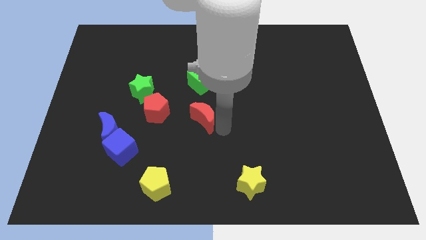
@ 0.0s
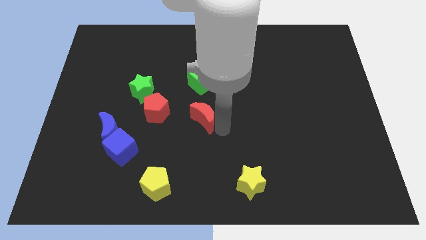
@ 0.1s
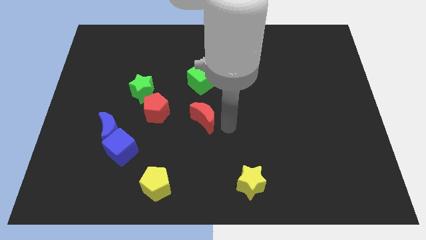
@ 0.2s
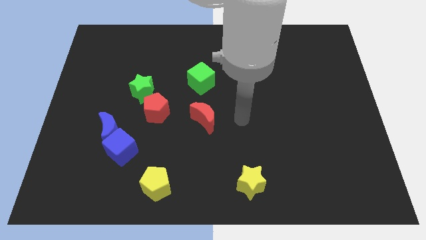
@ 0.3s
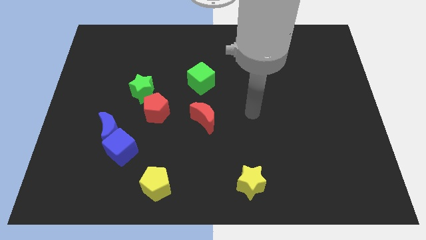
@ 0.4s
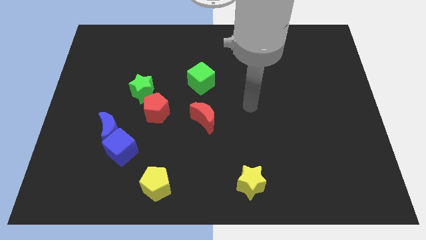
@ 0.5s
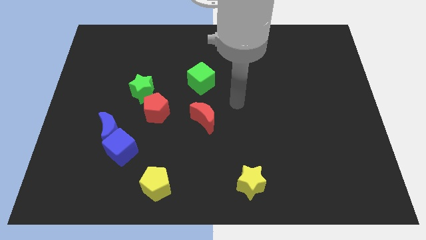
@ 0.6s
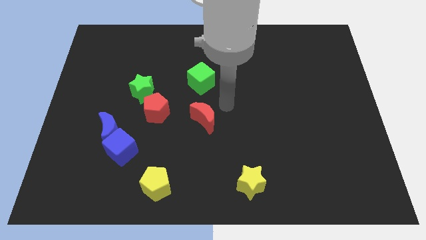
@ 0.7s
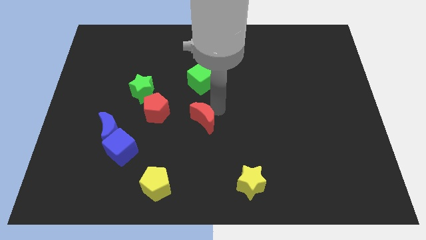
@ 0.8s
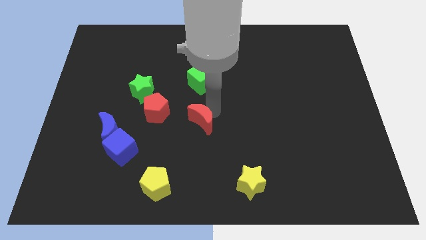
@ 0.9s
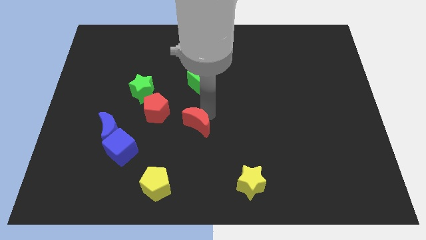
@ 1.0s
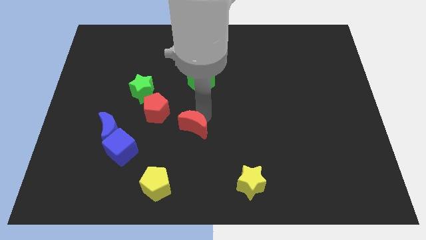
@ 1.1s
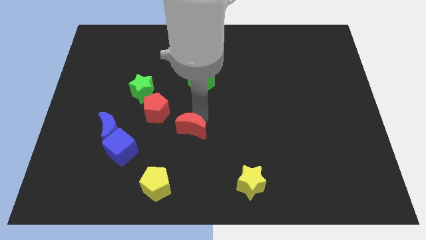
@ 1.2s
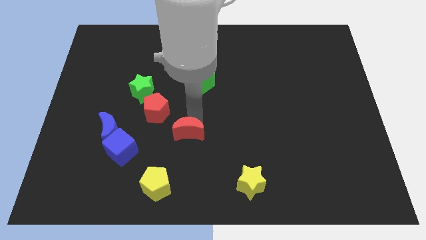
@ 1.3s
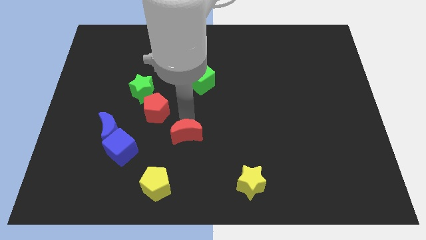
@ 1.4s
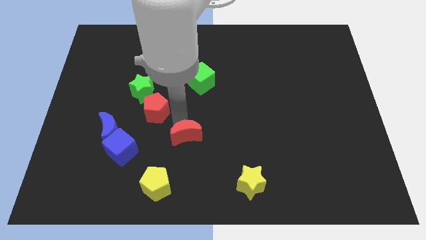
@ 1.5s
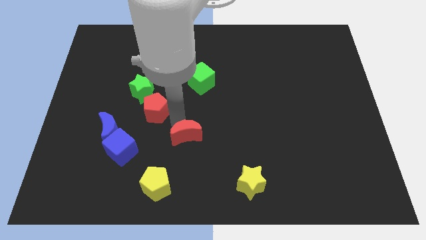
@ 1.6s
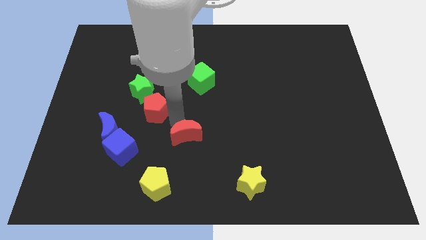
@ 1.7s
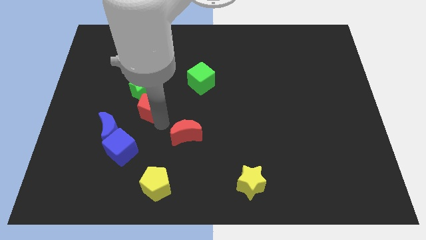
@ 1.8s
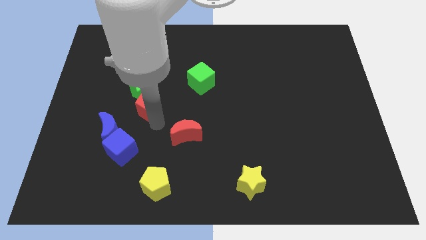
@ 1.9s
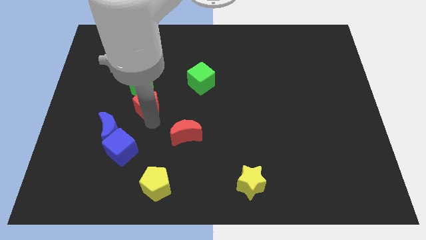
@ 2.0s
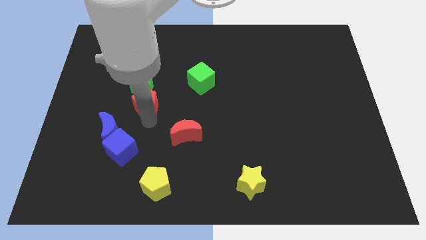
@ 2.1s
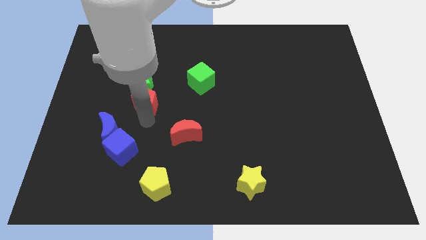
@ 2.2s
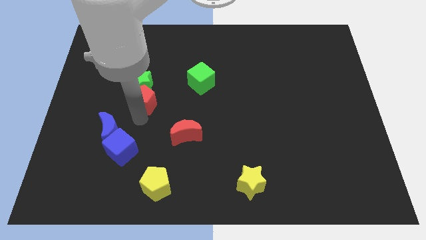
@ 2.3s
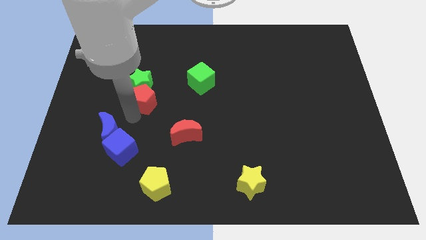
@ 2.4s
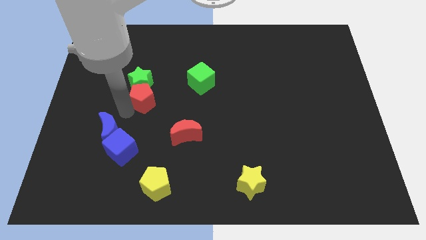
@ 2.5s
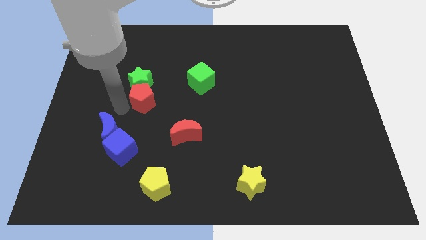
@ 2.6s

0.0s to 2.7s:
slightly touch the red moon and red pentagon

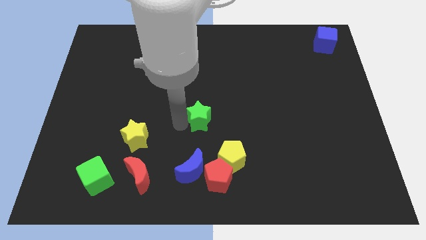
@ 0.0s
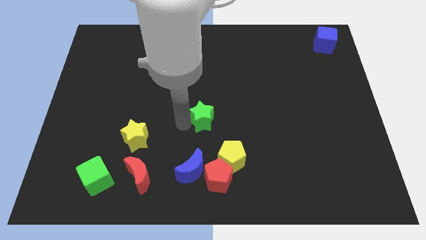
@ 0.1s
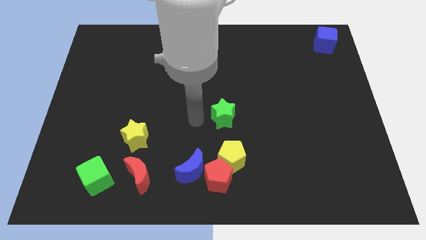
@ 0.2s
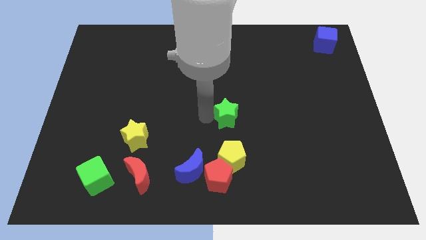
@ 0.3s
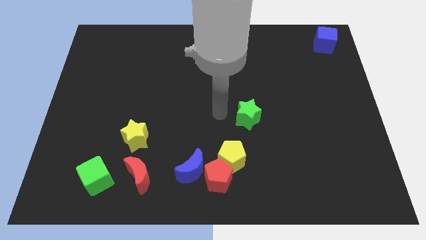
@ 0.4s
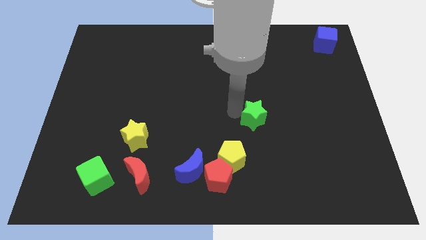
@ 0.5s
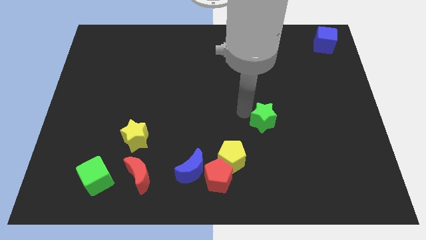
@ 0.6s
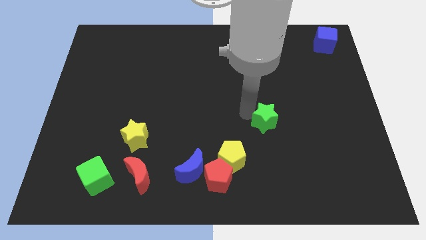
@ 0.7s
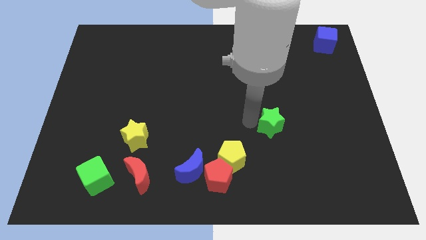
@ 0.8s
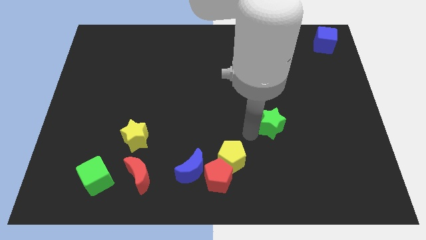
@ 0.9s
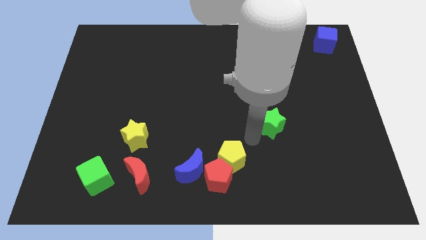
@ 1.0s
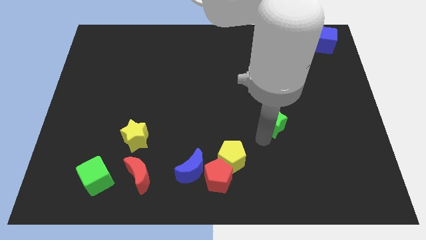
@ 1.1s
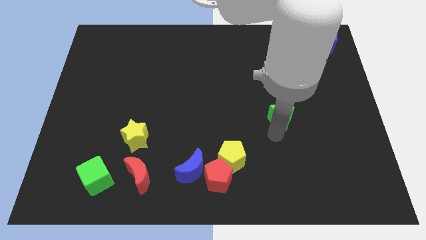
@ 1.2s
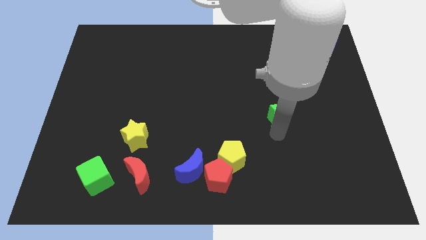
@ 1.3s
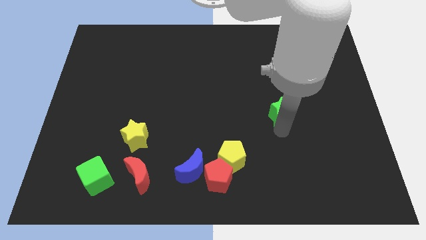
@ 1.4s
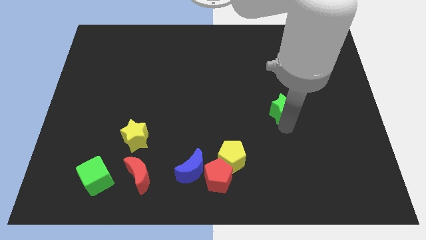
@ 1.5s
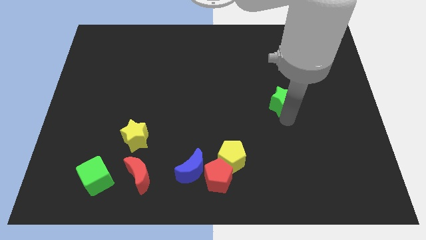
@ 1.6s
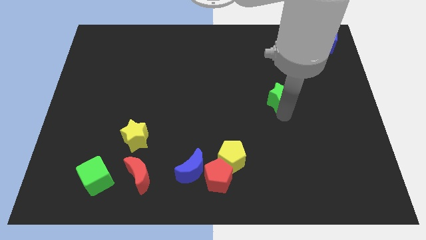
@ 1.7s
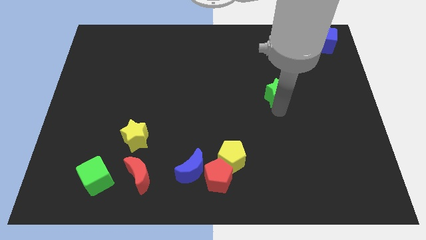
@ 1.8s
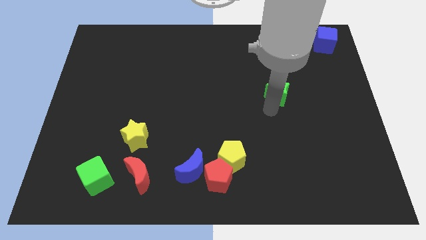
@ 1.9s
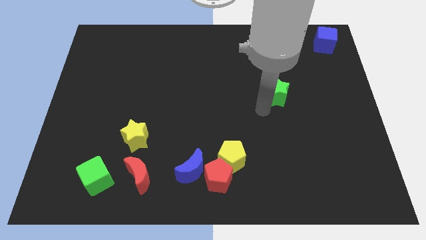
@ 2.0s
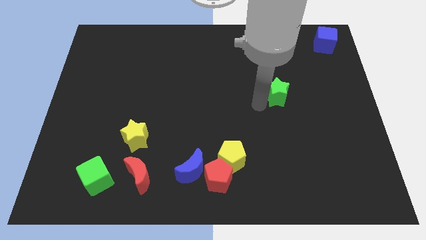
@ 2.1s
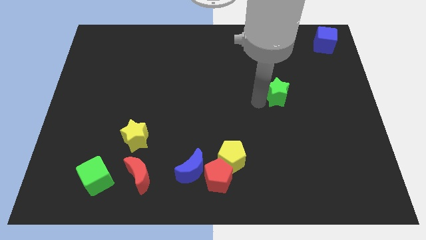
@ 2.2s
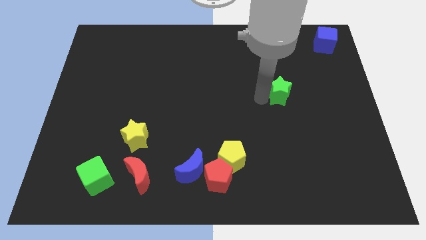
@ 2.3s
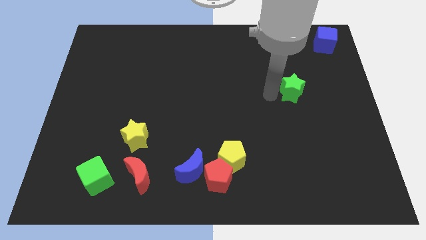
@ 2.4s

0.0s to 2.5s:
push the green star up slightly

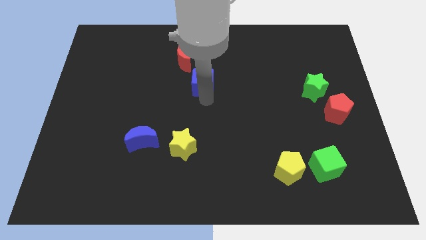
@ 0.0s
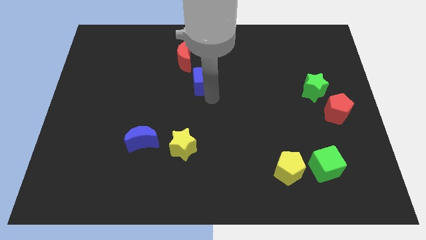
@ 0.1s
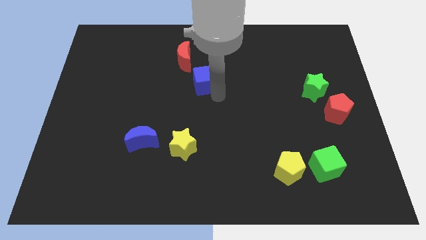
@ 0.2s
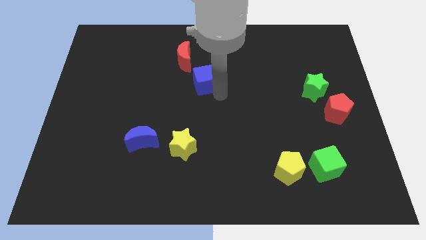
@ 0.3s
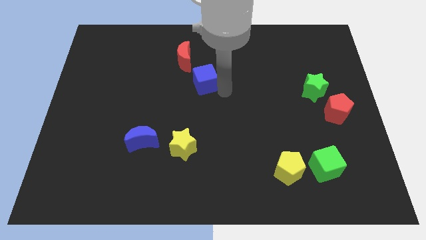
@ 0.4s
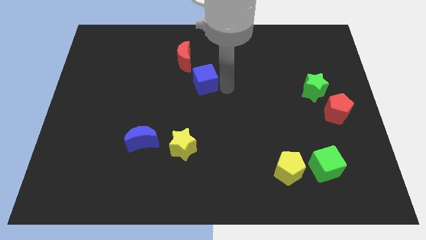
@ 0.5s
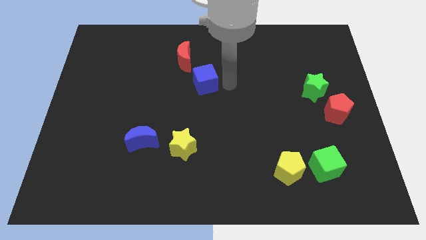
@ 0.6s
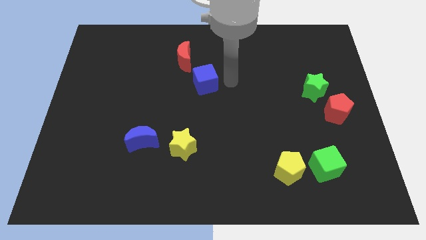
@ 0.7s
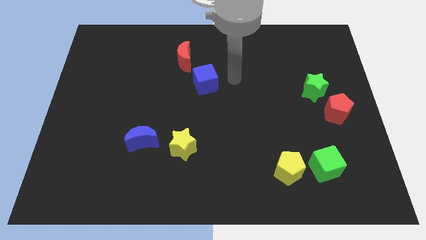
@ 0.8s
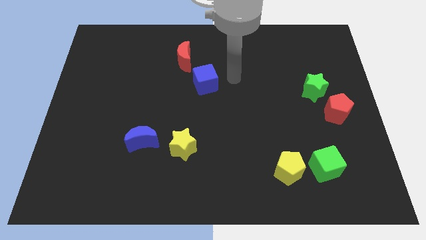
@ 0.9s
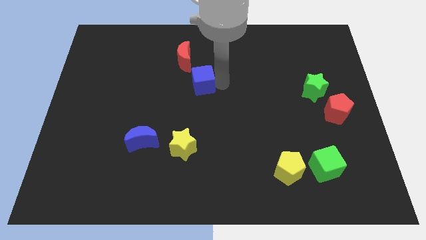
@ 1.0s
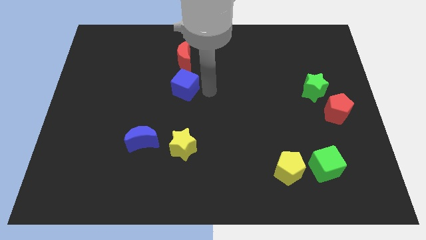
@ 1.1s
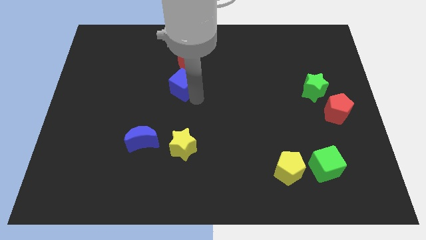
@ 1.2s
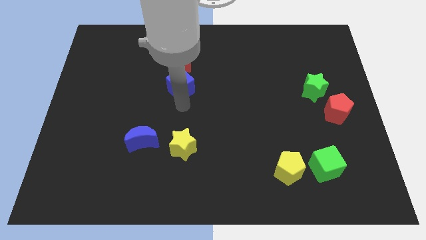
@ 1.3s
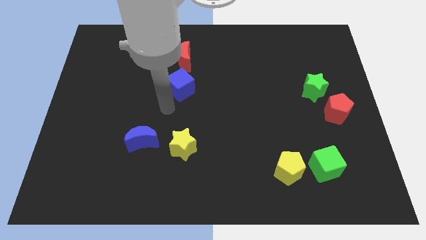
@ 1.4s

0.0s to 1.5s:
place blue cube vertically towards red crescent

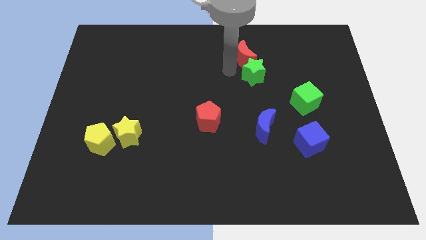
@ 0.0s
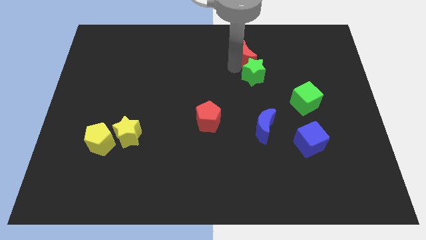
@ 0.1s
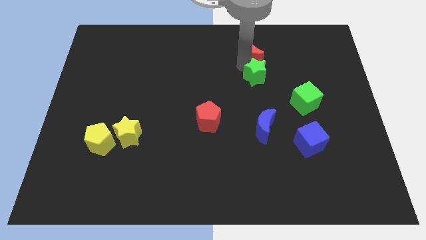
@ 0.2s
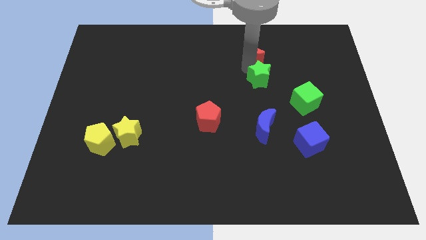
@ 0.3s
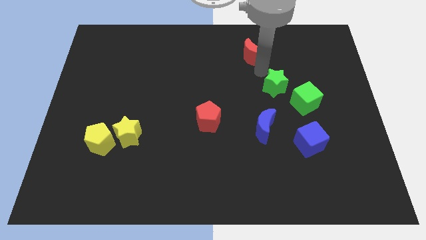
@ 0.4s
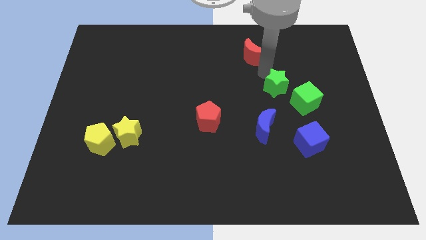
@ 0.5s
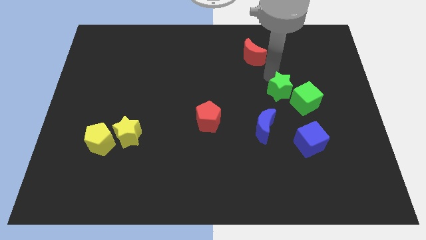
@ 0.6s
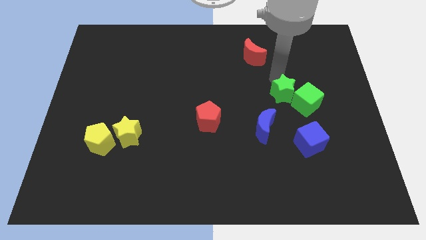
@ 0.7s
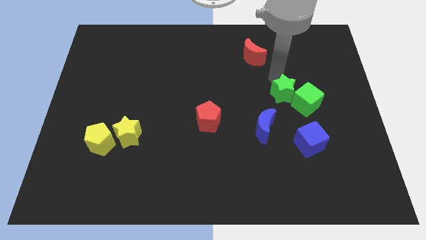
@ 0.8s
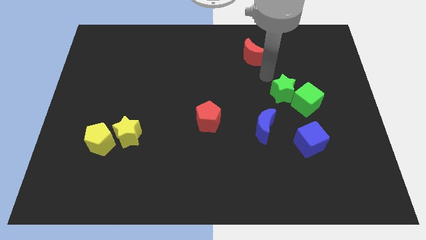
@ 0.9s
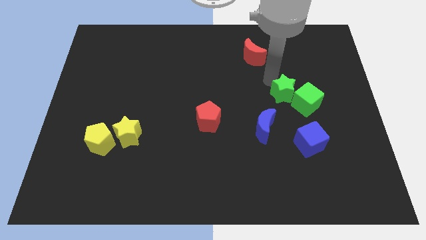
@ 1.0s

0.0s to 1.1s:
push the green star towards the left of the green cube

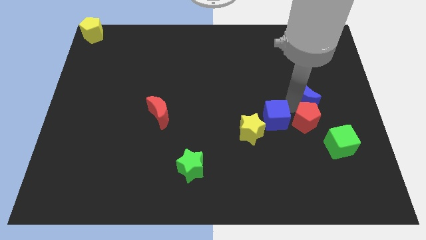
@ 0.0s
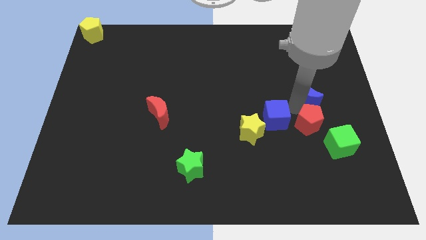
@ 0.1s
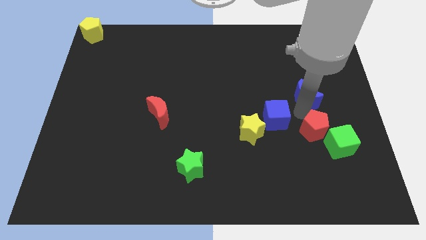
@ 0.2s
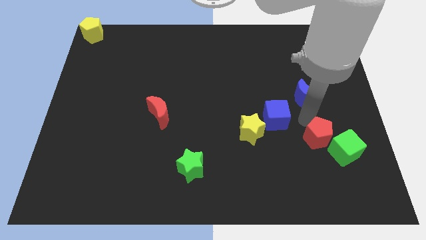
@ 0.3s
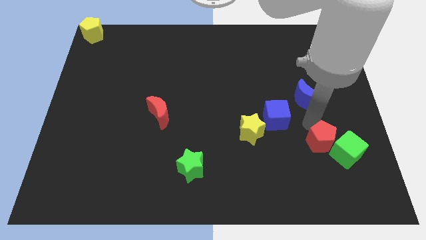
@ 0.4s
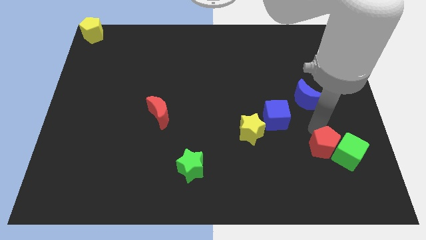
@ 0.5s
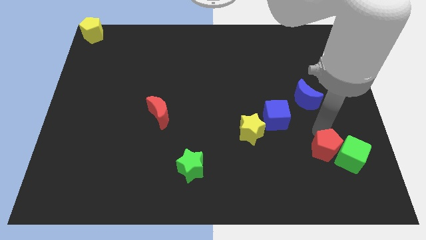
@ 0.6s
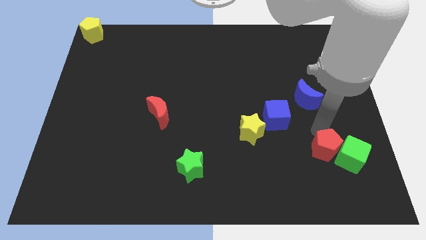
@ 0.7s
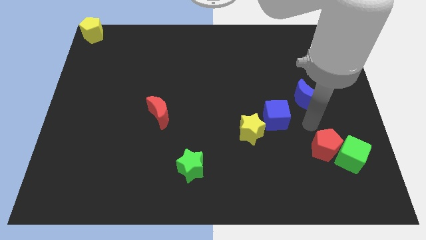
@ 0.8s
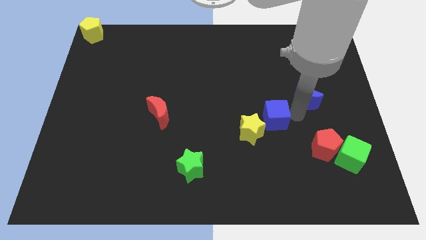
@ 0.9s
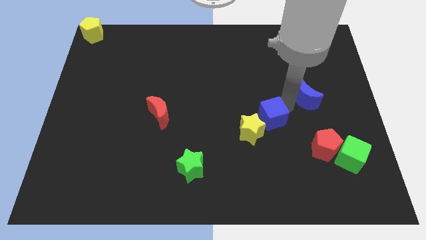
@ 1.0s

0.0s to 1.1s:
move the red pentagon into the green cube

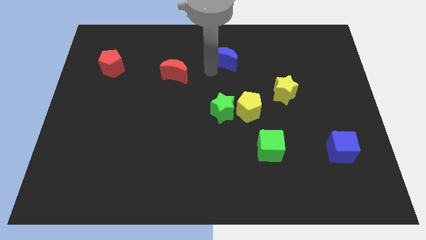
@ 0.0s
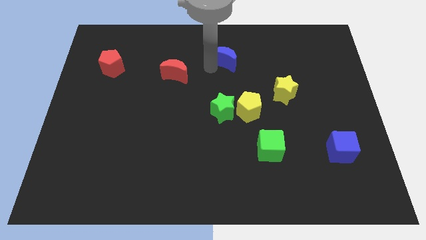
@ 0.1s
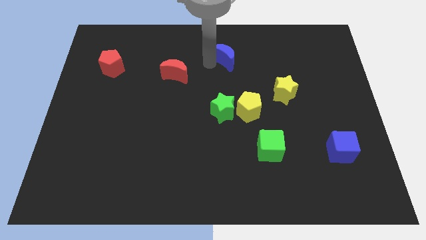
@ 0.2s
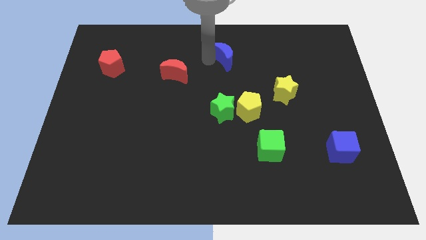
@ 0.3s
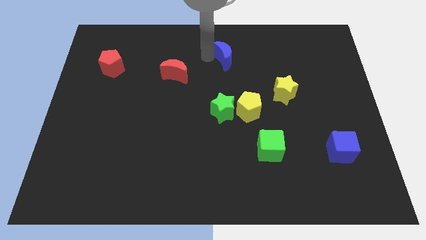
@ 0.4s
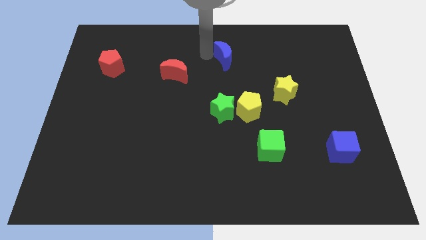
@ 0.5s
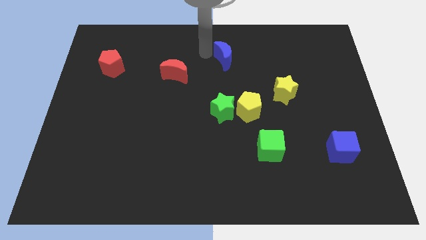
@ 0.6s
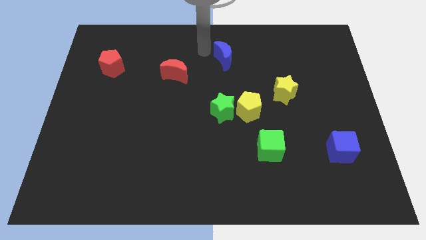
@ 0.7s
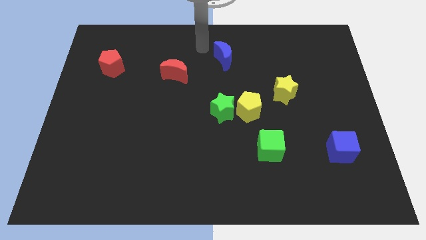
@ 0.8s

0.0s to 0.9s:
move the blue crescent slightly upwards
